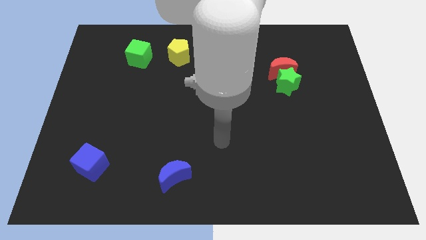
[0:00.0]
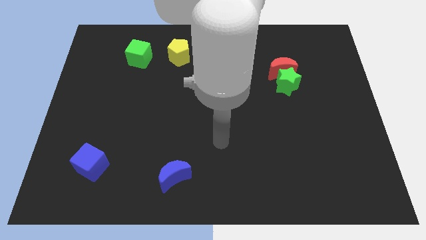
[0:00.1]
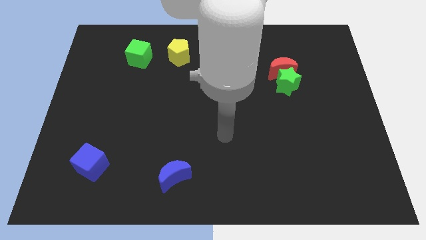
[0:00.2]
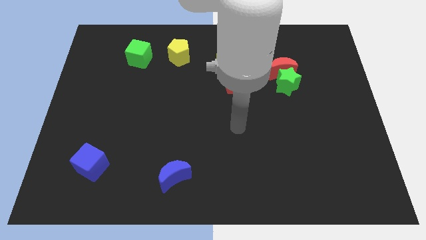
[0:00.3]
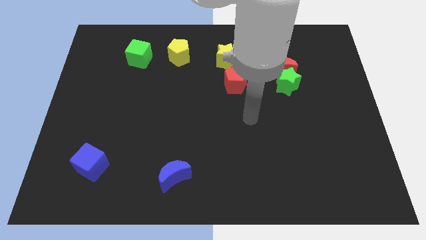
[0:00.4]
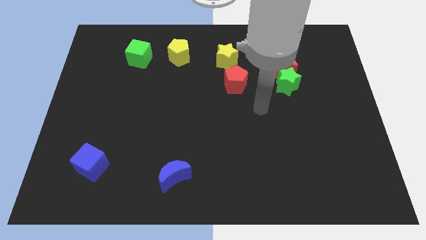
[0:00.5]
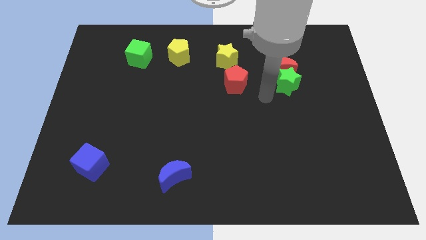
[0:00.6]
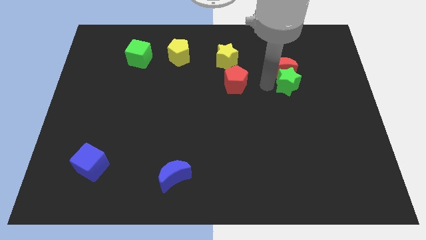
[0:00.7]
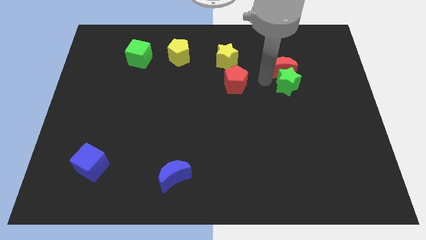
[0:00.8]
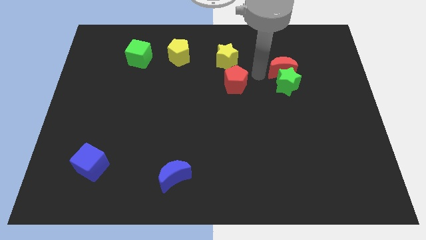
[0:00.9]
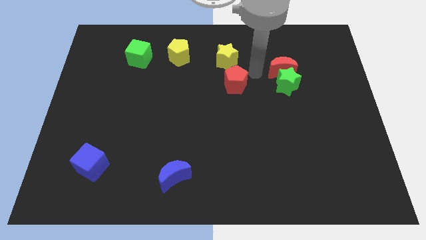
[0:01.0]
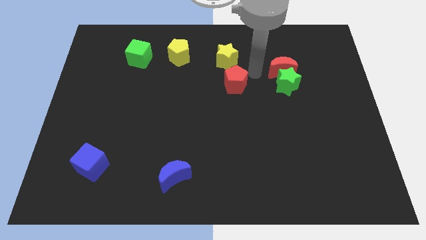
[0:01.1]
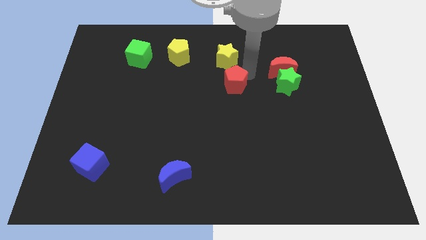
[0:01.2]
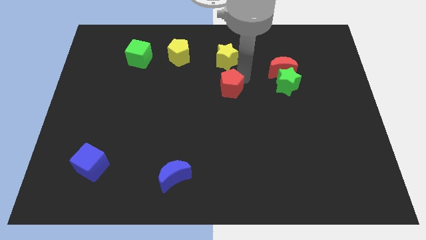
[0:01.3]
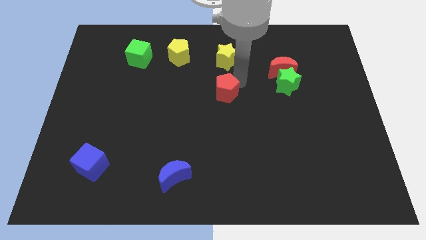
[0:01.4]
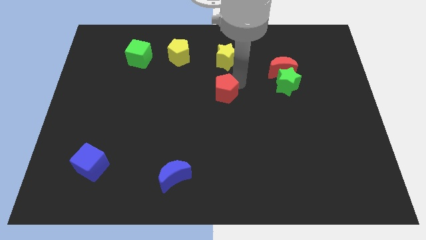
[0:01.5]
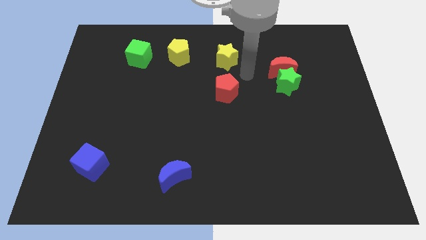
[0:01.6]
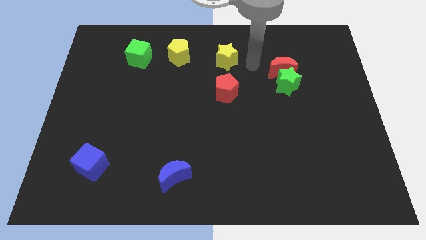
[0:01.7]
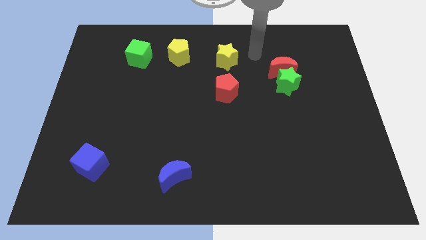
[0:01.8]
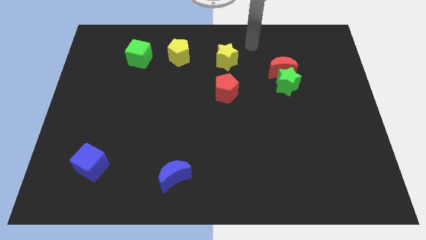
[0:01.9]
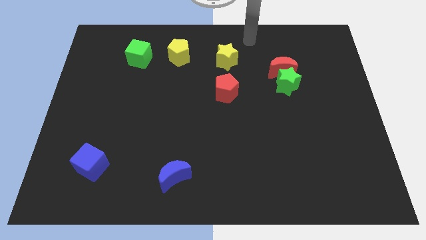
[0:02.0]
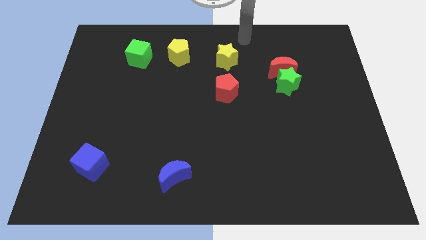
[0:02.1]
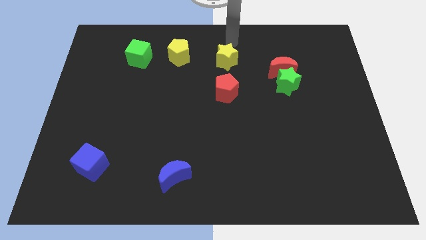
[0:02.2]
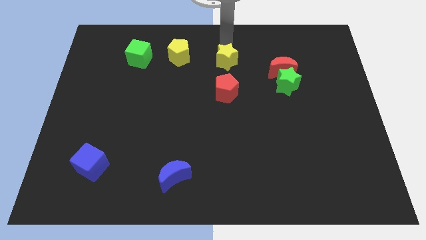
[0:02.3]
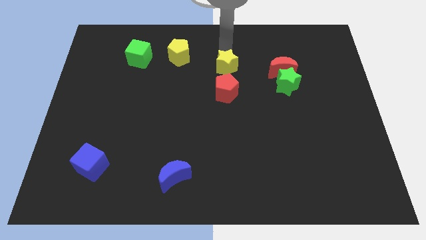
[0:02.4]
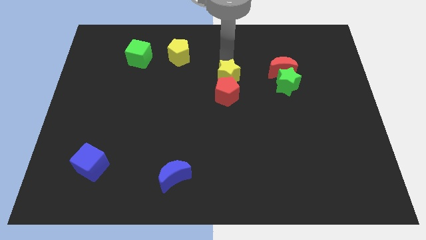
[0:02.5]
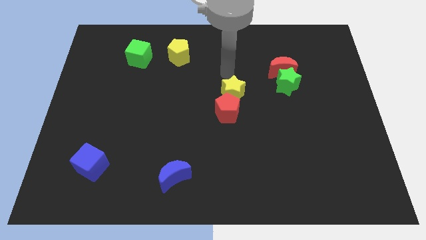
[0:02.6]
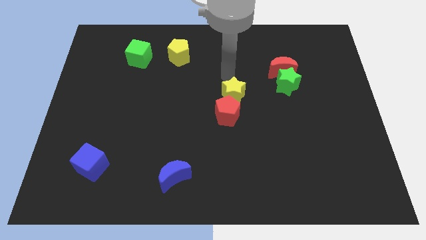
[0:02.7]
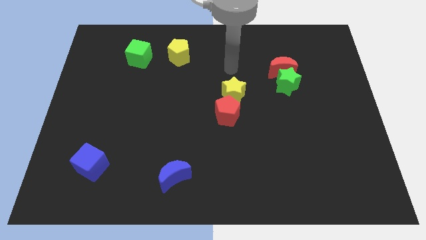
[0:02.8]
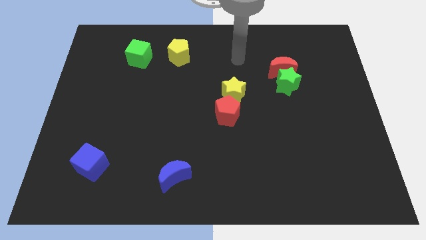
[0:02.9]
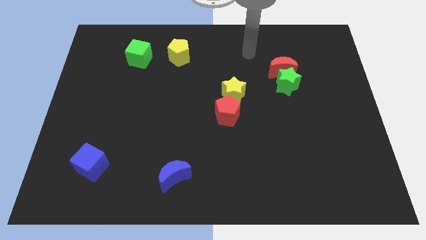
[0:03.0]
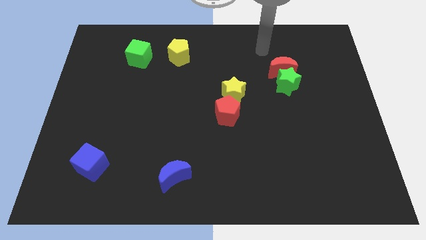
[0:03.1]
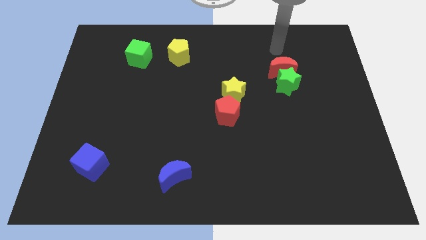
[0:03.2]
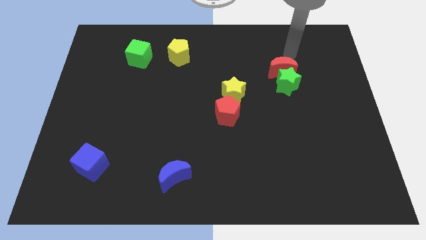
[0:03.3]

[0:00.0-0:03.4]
push yellow star into yellow pentagon

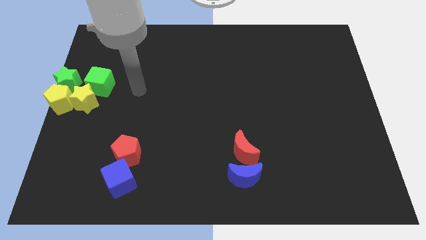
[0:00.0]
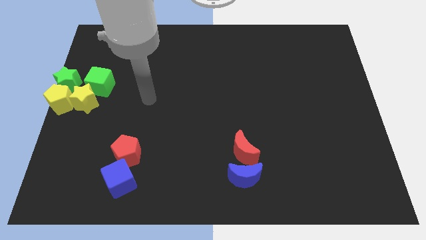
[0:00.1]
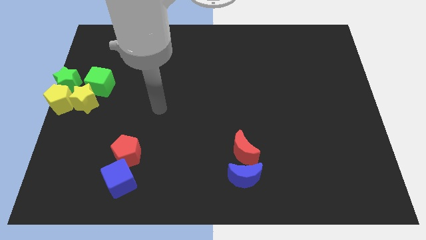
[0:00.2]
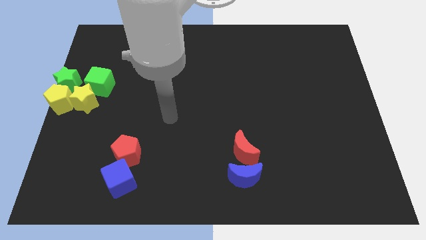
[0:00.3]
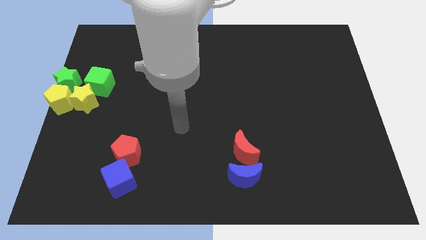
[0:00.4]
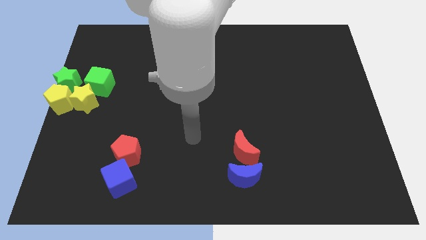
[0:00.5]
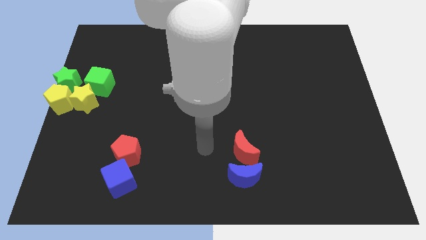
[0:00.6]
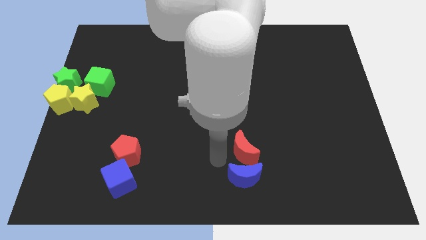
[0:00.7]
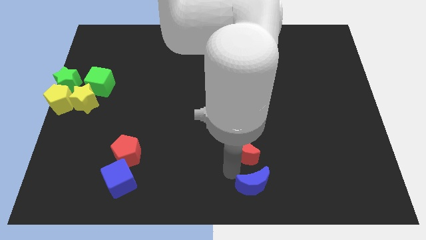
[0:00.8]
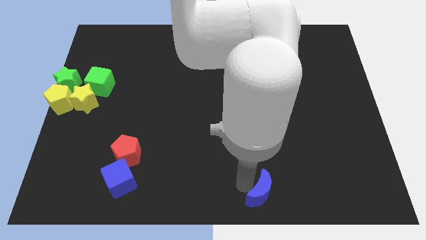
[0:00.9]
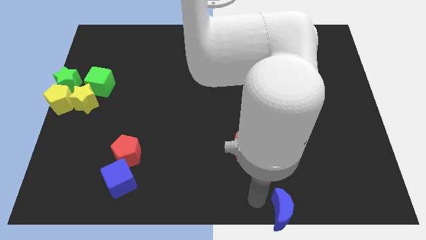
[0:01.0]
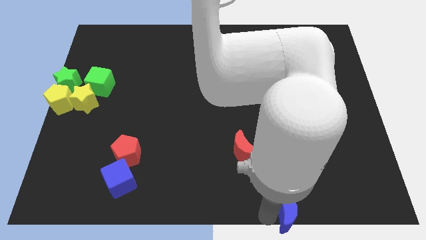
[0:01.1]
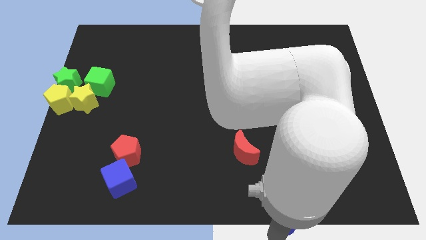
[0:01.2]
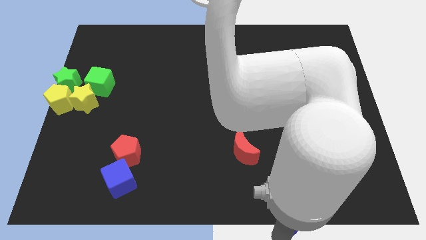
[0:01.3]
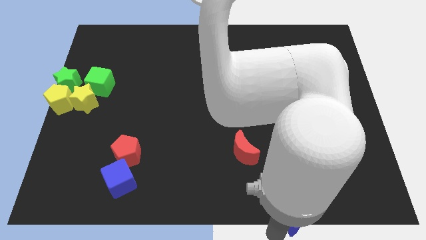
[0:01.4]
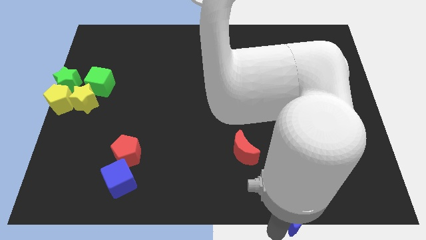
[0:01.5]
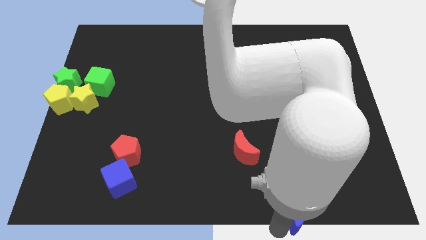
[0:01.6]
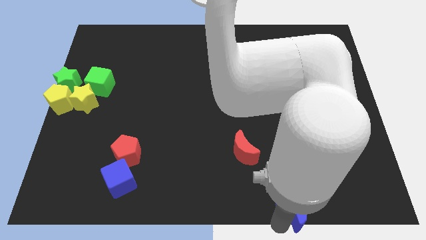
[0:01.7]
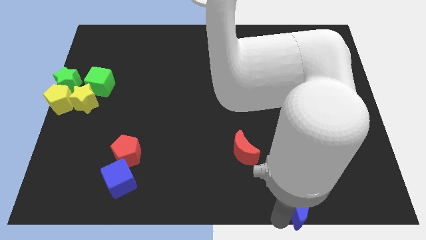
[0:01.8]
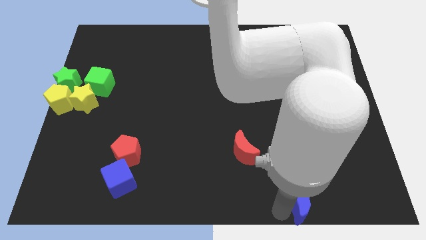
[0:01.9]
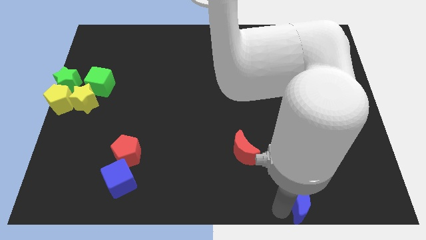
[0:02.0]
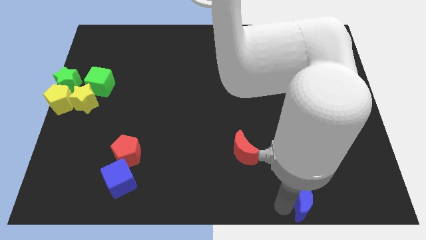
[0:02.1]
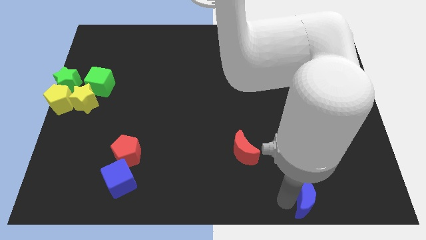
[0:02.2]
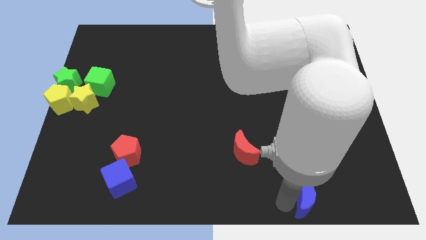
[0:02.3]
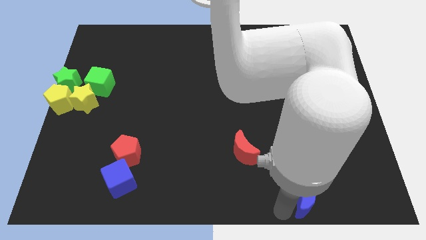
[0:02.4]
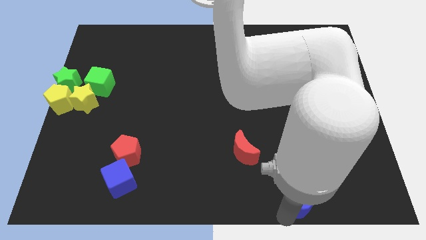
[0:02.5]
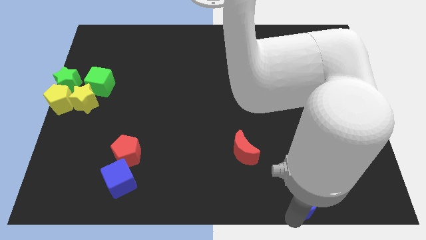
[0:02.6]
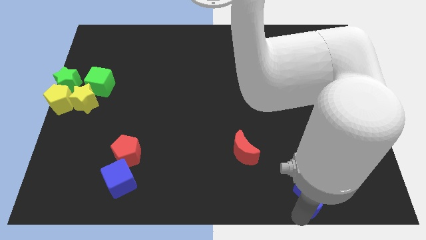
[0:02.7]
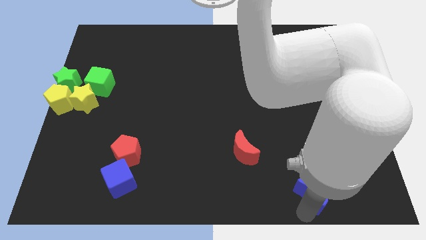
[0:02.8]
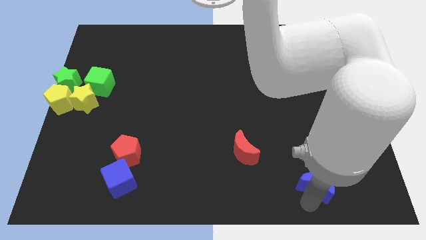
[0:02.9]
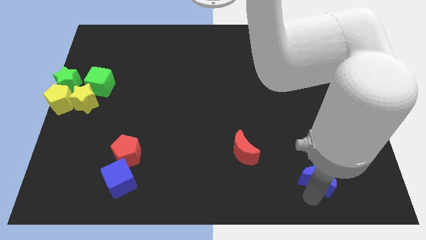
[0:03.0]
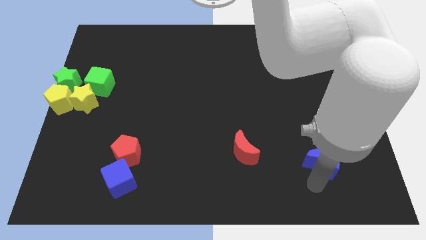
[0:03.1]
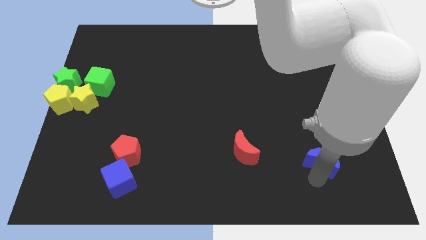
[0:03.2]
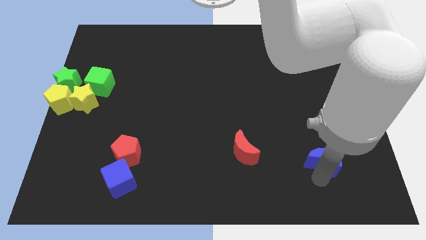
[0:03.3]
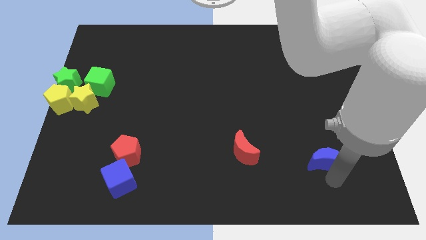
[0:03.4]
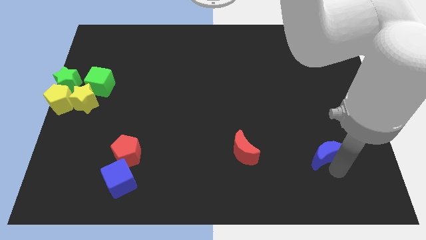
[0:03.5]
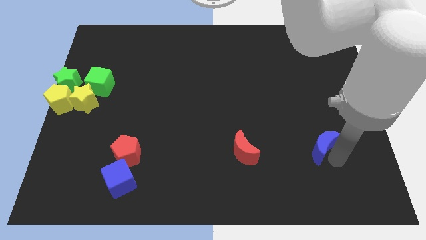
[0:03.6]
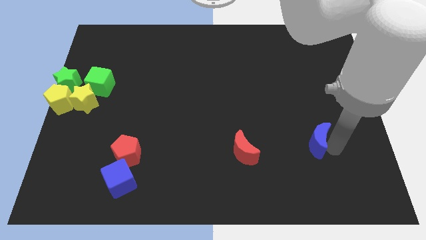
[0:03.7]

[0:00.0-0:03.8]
separate the blue crescent from the red crescent

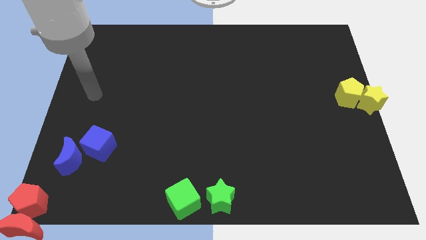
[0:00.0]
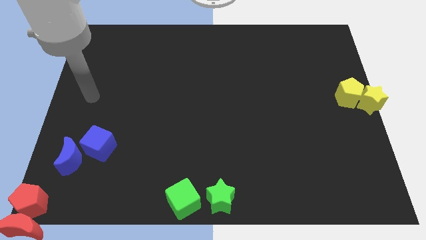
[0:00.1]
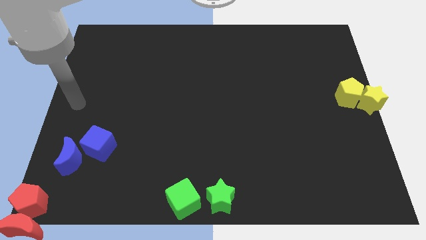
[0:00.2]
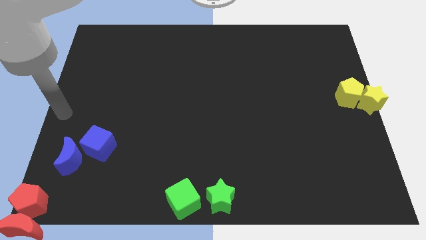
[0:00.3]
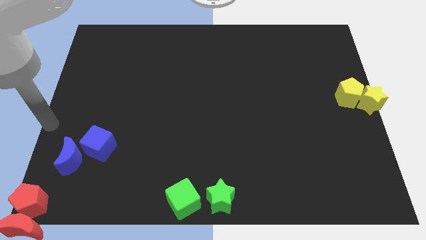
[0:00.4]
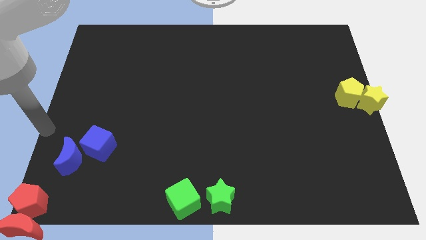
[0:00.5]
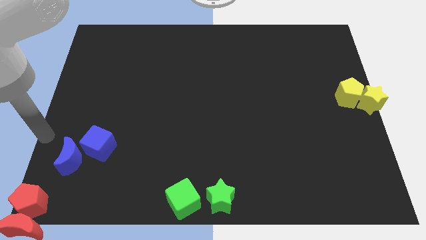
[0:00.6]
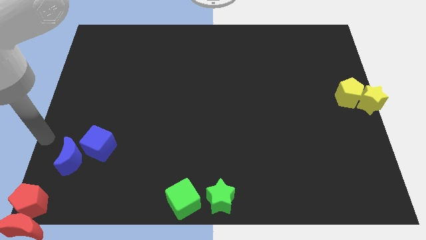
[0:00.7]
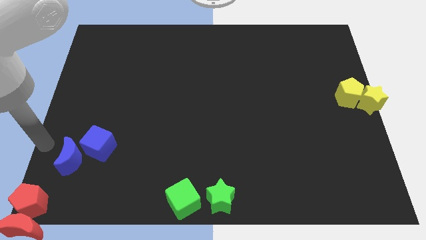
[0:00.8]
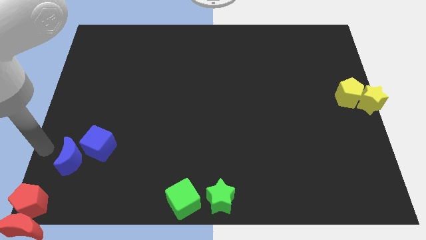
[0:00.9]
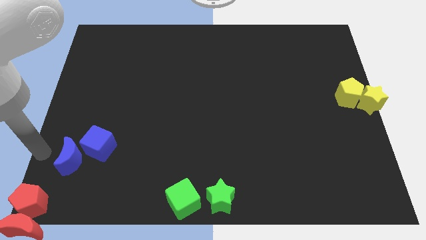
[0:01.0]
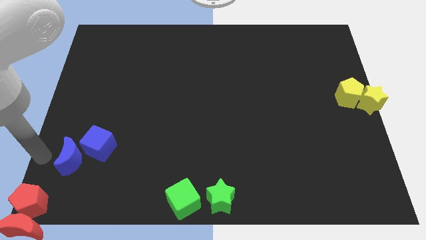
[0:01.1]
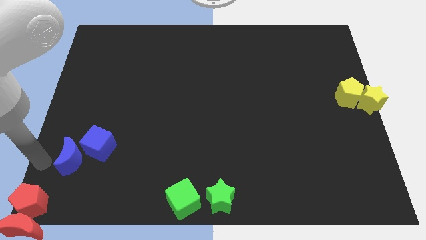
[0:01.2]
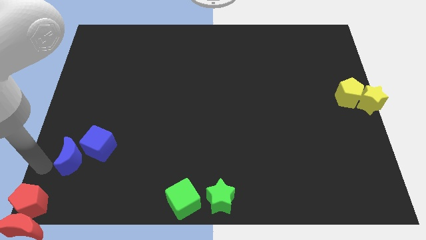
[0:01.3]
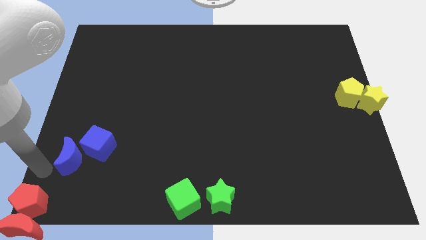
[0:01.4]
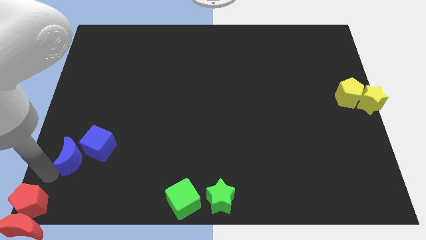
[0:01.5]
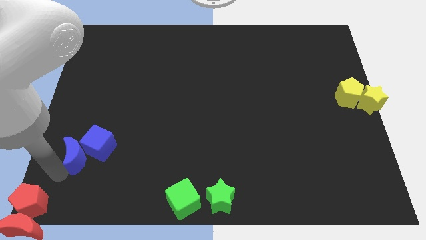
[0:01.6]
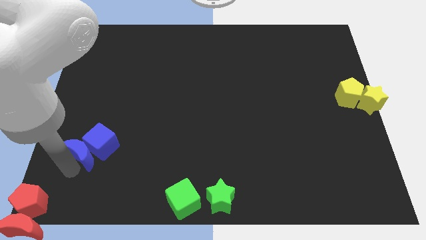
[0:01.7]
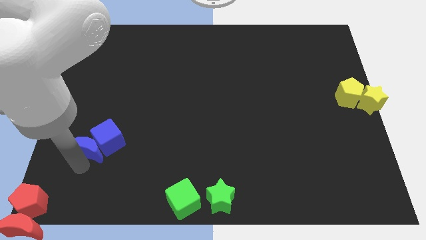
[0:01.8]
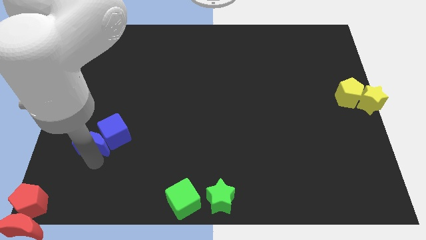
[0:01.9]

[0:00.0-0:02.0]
push the blue moon into the blue cube
